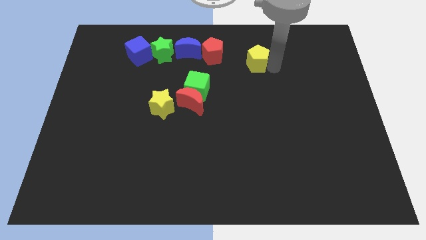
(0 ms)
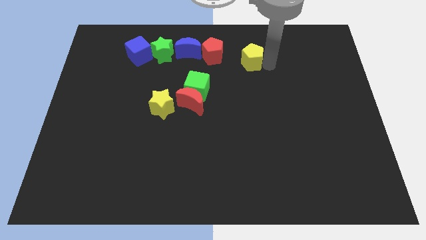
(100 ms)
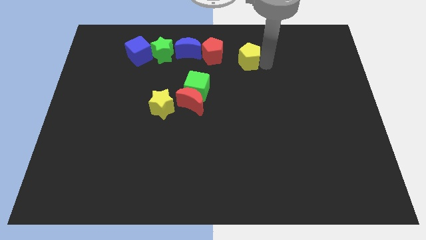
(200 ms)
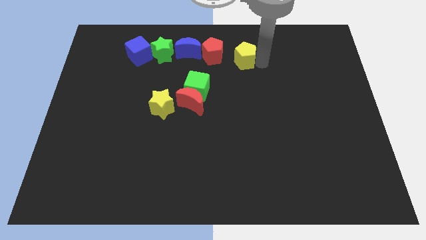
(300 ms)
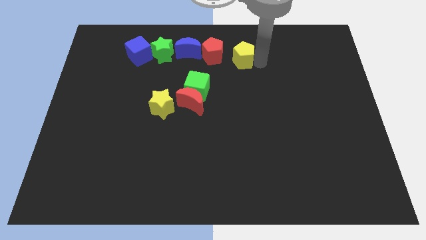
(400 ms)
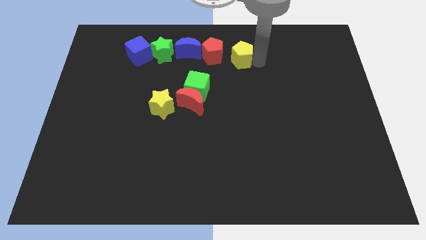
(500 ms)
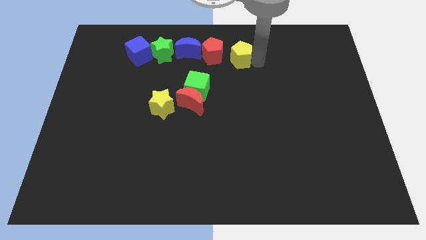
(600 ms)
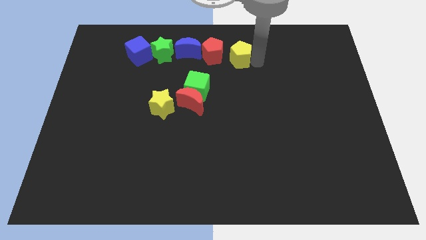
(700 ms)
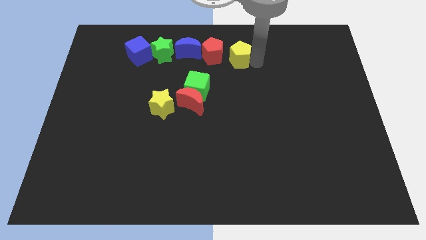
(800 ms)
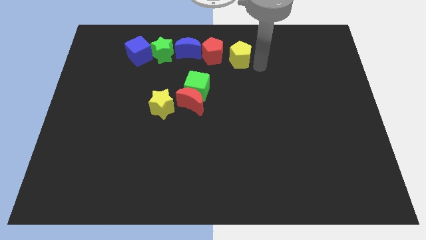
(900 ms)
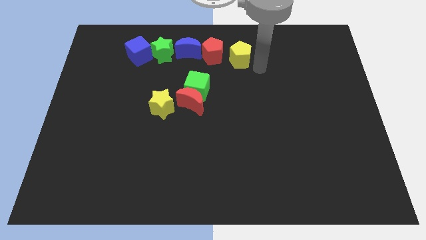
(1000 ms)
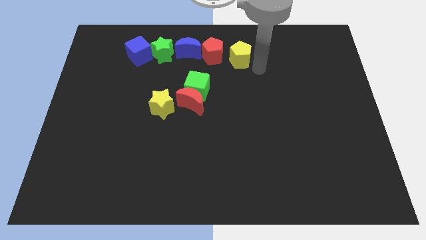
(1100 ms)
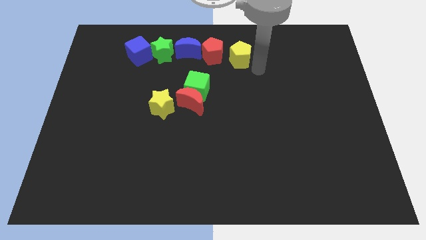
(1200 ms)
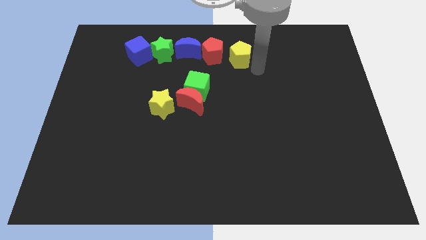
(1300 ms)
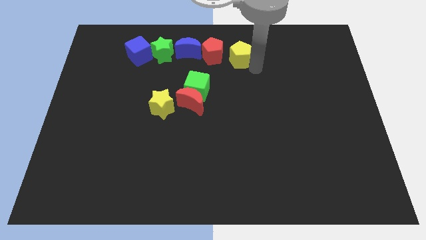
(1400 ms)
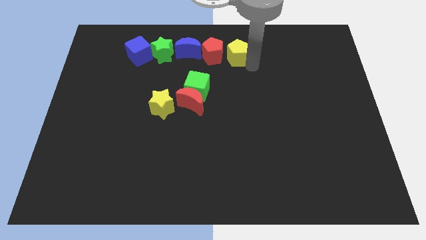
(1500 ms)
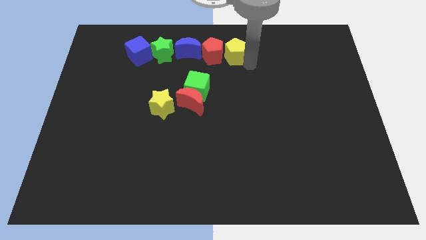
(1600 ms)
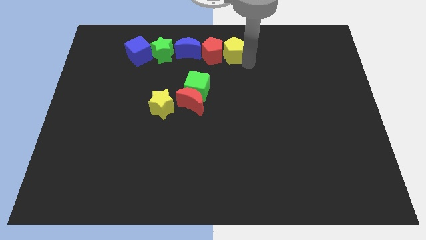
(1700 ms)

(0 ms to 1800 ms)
place yellow pentagon close to red pentagon

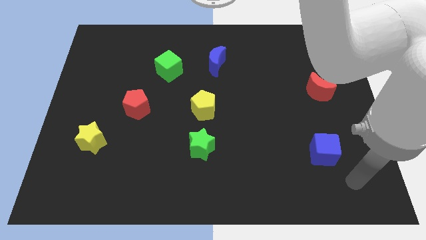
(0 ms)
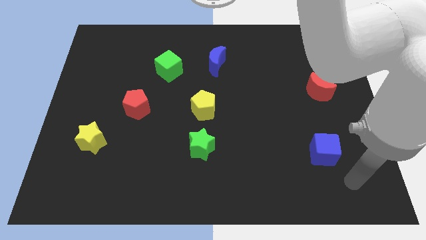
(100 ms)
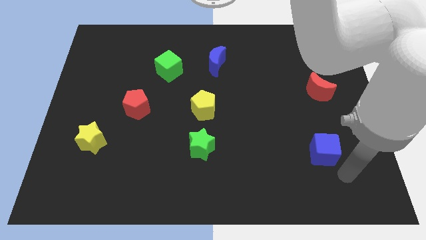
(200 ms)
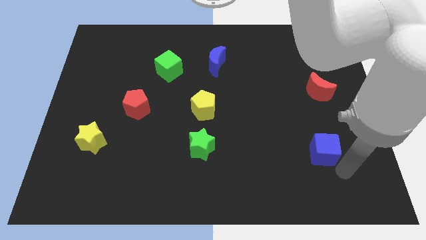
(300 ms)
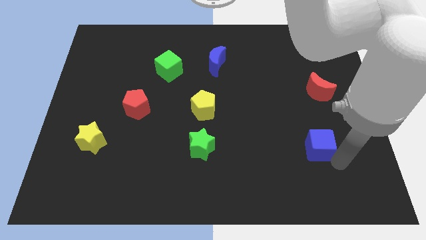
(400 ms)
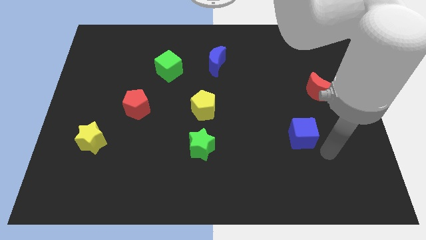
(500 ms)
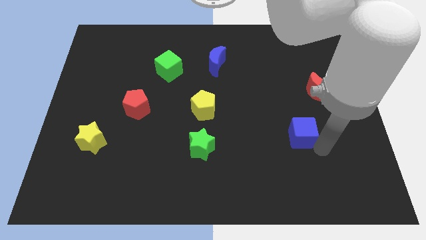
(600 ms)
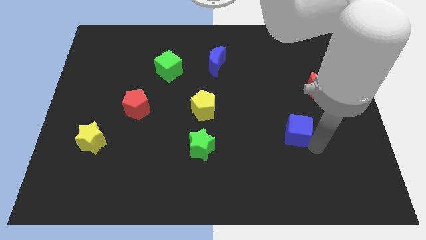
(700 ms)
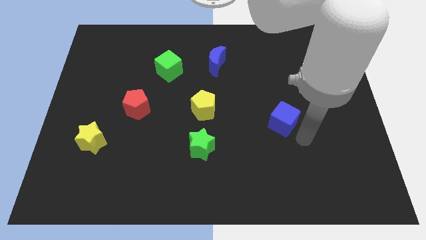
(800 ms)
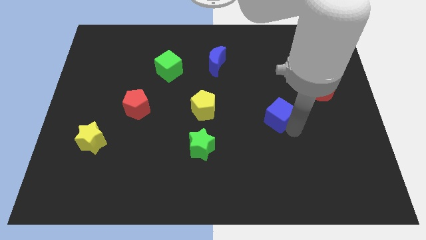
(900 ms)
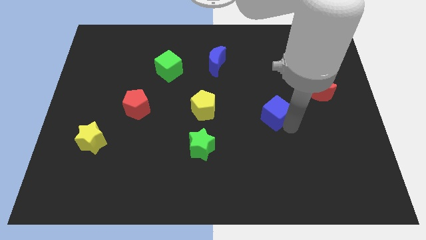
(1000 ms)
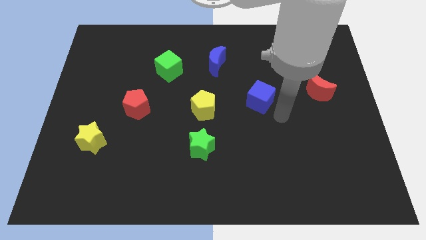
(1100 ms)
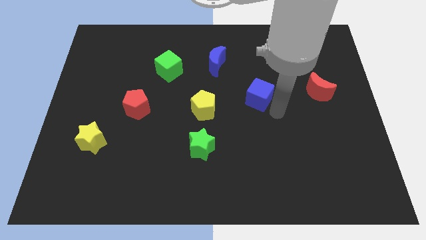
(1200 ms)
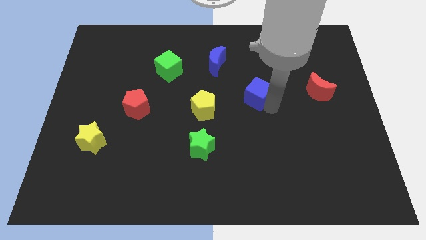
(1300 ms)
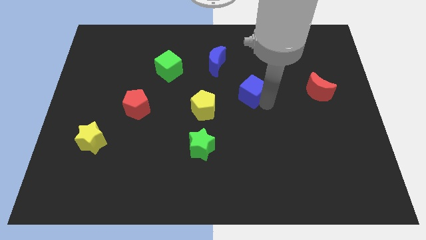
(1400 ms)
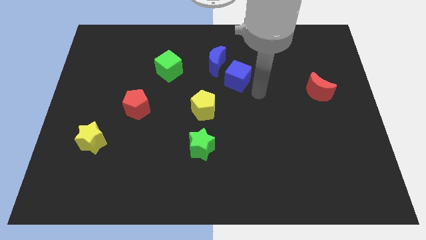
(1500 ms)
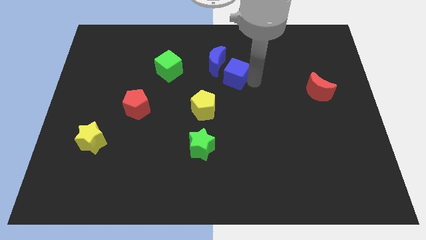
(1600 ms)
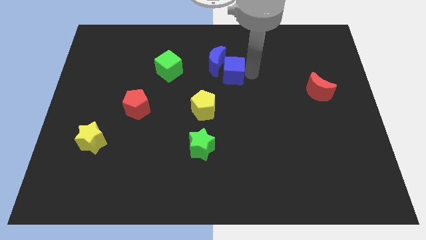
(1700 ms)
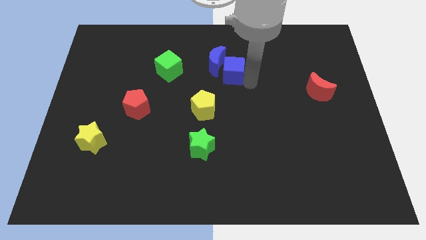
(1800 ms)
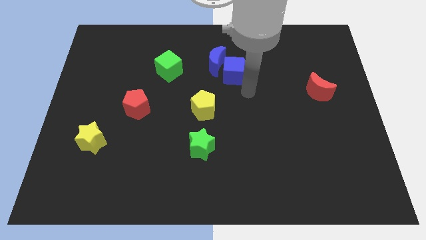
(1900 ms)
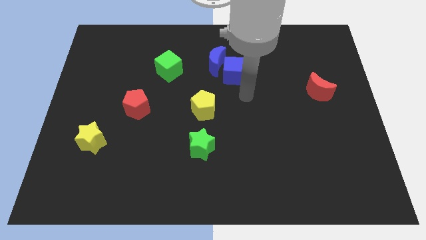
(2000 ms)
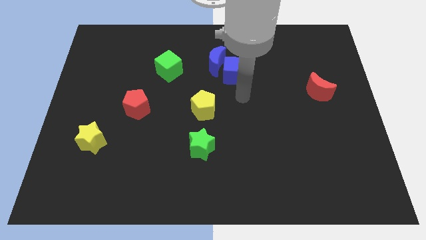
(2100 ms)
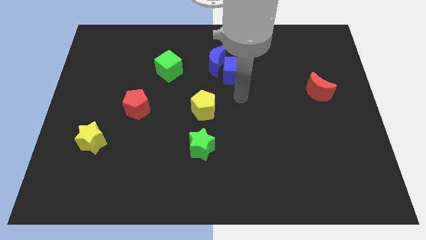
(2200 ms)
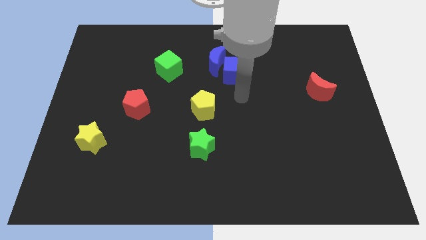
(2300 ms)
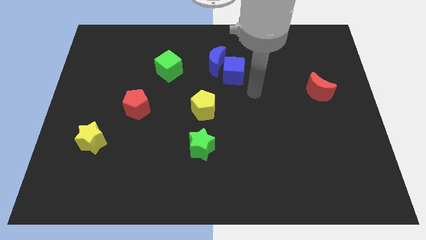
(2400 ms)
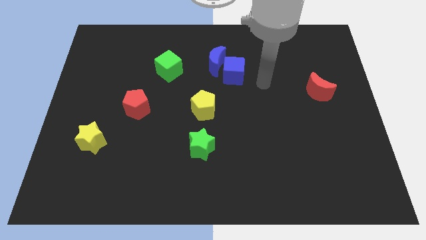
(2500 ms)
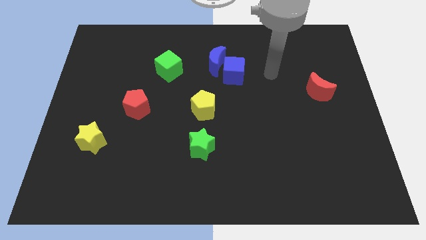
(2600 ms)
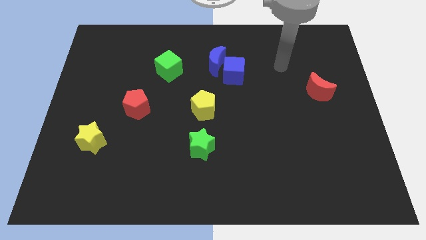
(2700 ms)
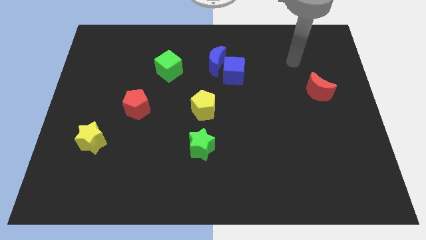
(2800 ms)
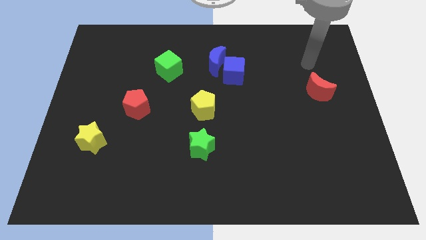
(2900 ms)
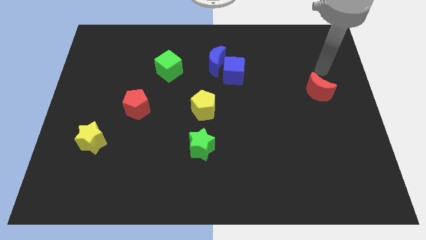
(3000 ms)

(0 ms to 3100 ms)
push the blue cube near blue moon

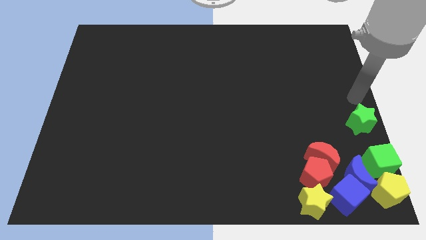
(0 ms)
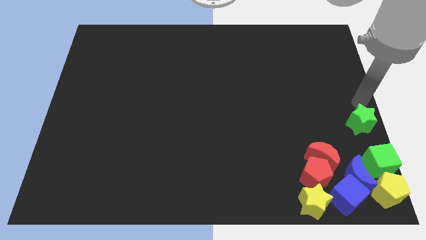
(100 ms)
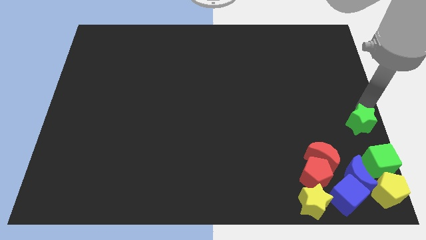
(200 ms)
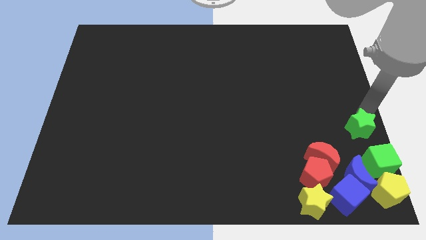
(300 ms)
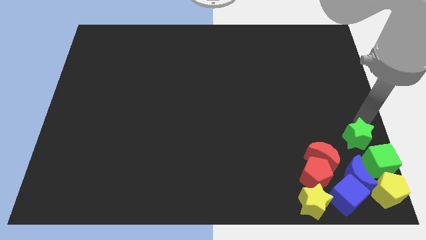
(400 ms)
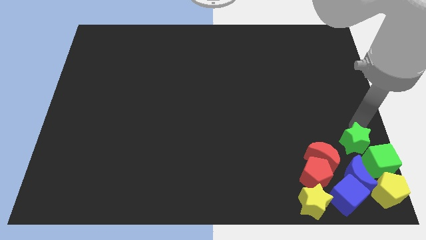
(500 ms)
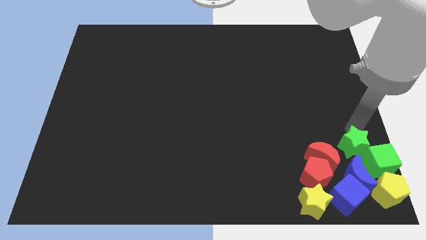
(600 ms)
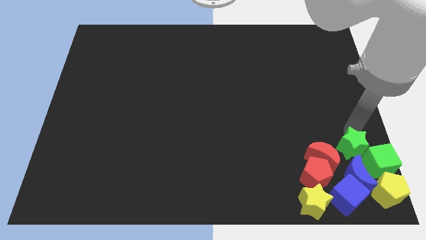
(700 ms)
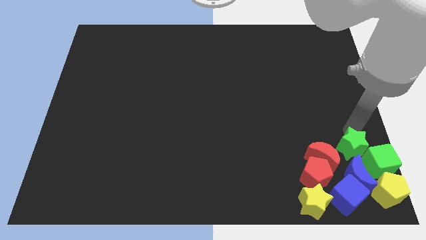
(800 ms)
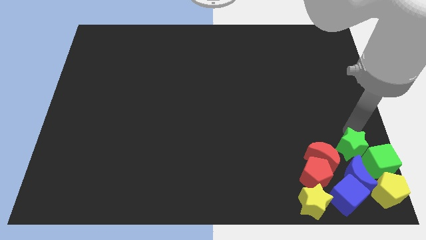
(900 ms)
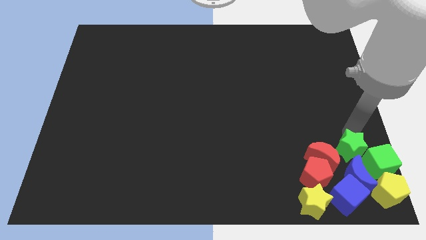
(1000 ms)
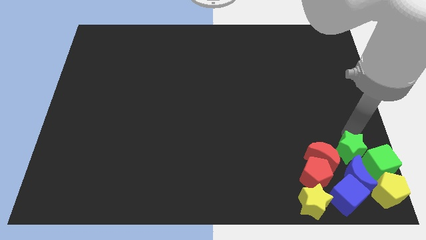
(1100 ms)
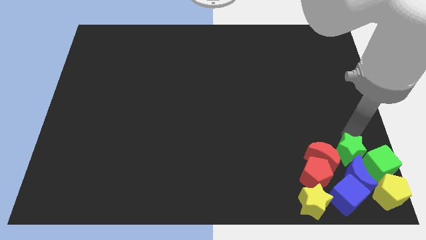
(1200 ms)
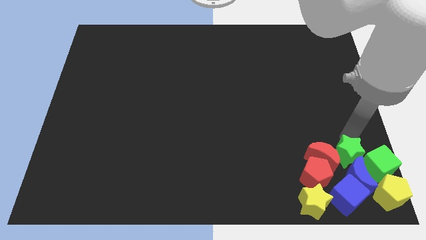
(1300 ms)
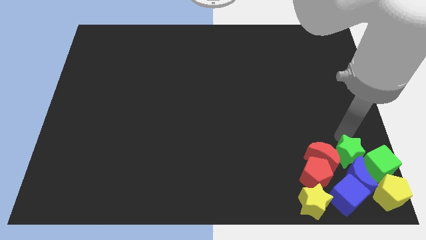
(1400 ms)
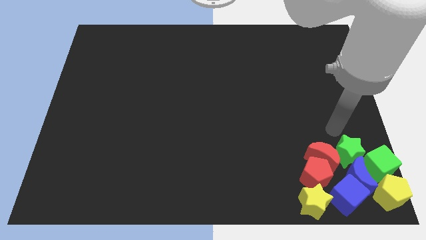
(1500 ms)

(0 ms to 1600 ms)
place the green star beside the green cube

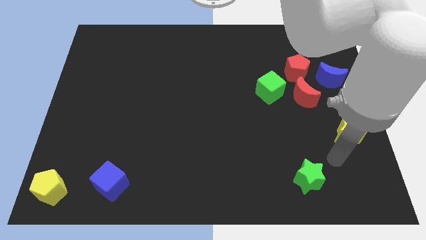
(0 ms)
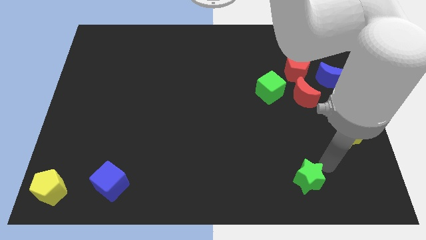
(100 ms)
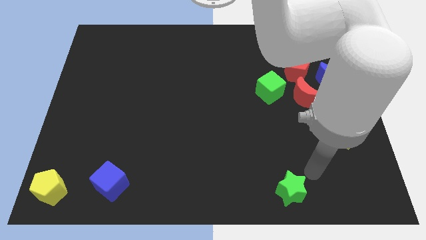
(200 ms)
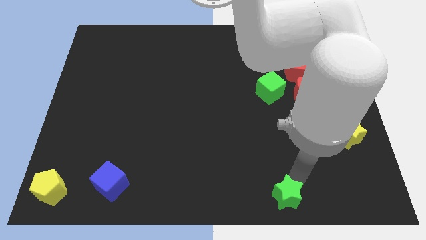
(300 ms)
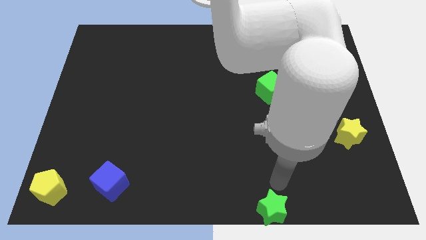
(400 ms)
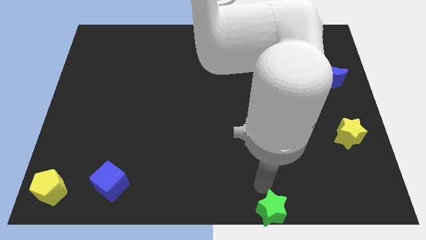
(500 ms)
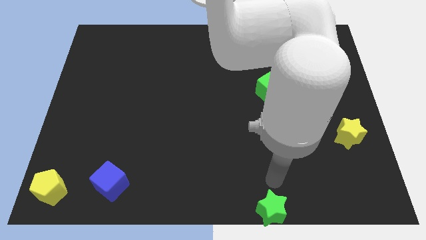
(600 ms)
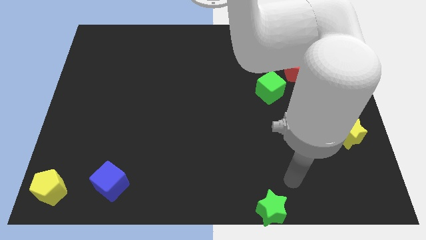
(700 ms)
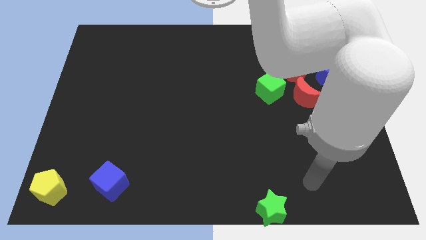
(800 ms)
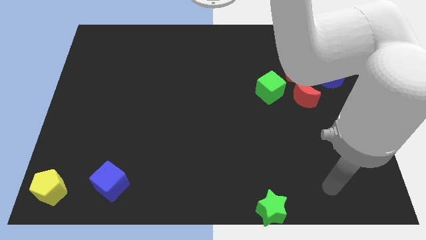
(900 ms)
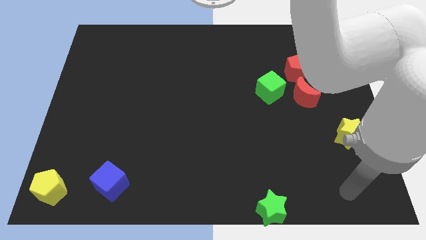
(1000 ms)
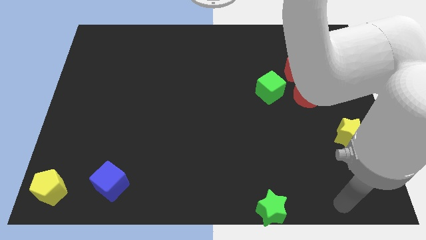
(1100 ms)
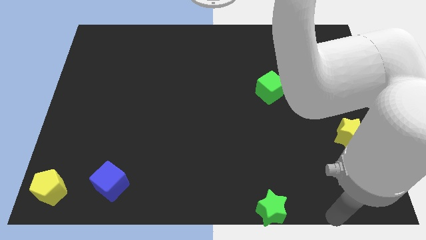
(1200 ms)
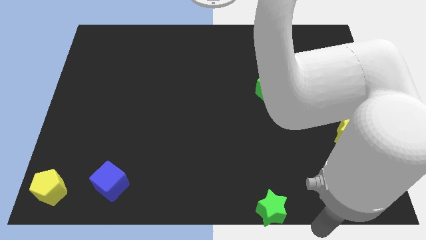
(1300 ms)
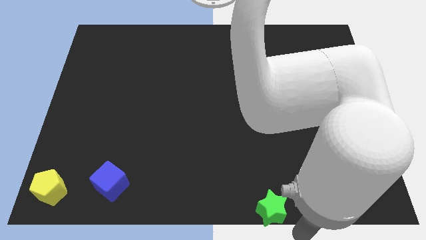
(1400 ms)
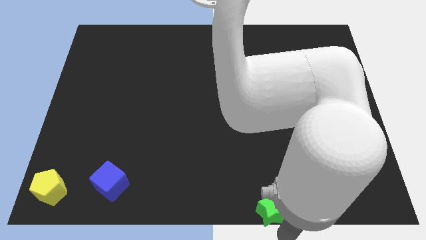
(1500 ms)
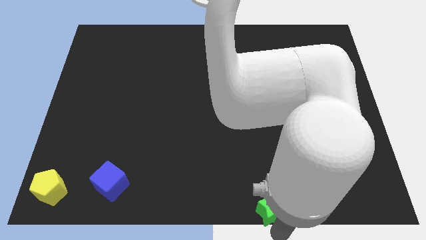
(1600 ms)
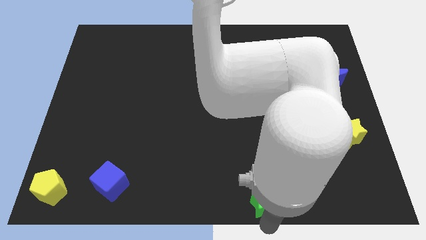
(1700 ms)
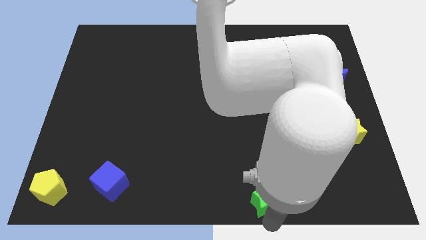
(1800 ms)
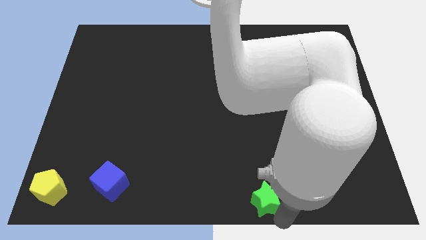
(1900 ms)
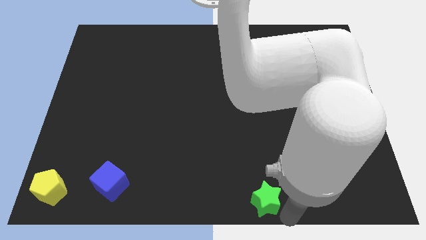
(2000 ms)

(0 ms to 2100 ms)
push green star towards bottom center

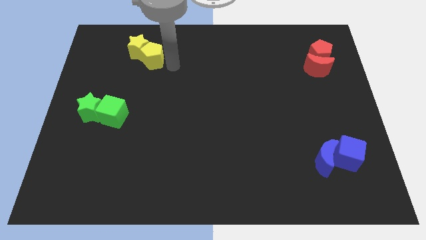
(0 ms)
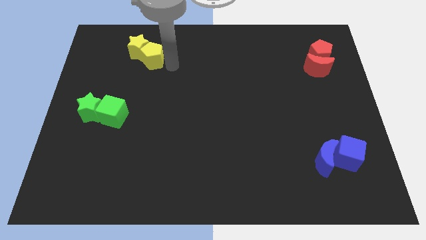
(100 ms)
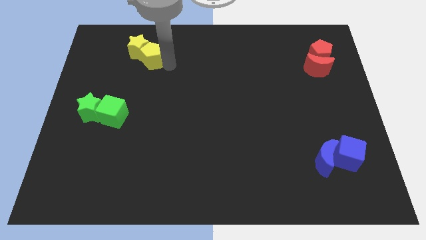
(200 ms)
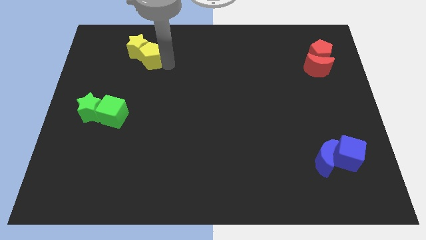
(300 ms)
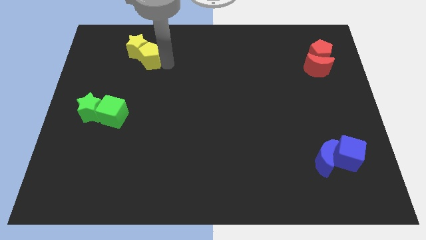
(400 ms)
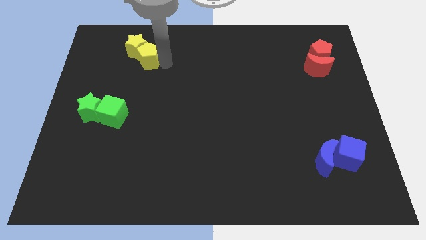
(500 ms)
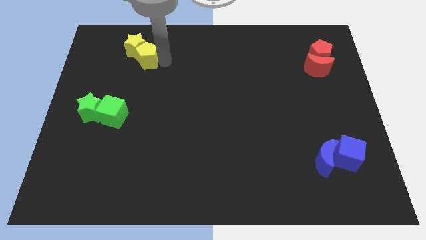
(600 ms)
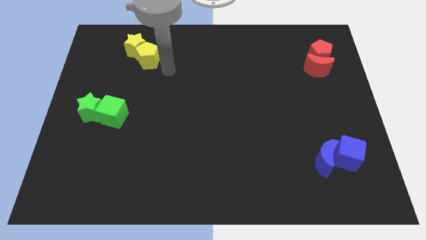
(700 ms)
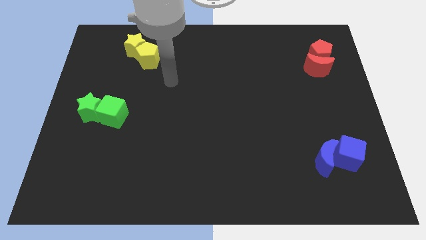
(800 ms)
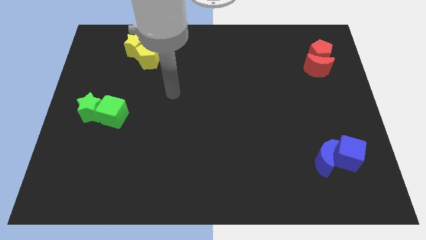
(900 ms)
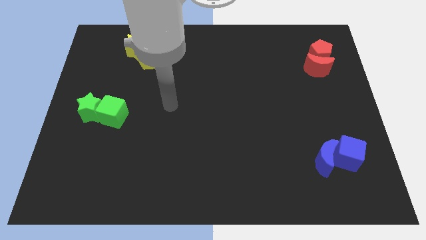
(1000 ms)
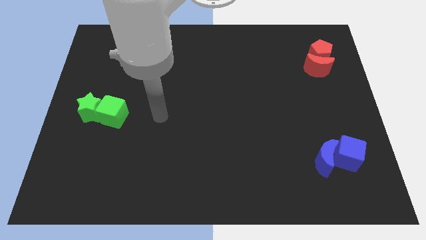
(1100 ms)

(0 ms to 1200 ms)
push the group of yellow blocks slightly to the left
